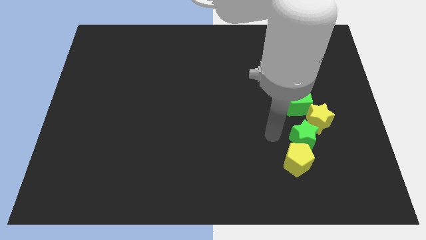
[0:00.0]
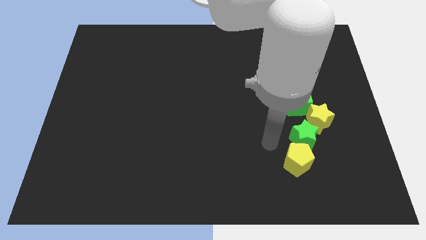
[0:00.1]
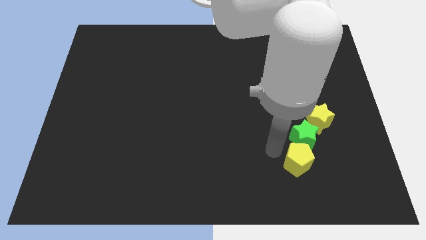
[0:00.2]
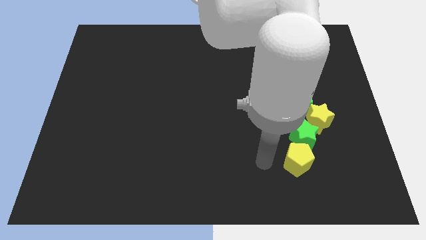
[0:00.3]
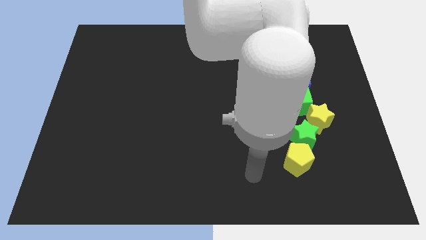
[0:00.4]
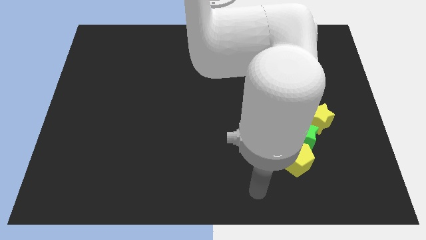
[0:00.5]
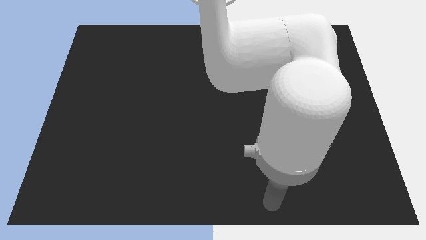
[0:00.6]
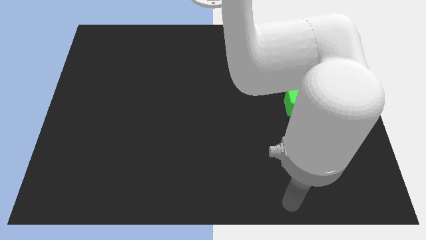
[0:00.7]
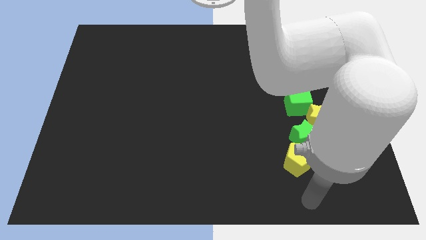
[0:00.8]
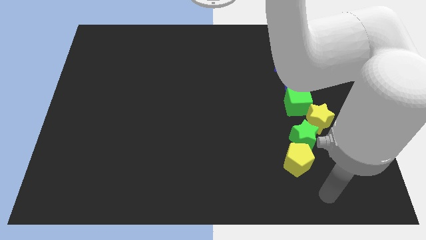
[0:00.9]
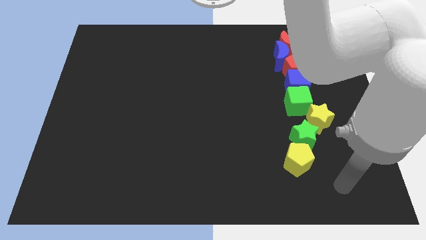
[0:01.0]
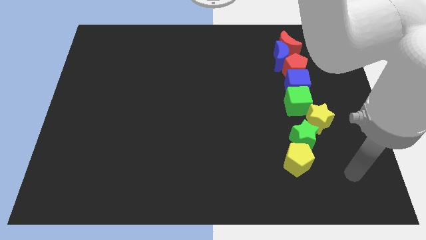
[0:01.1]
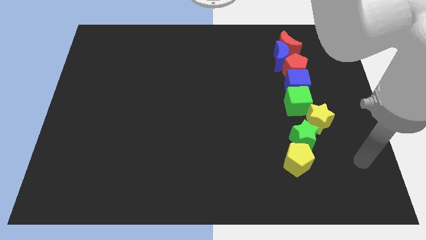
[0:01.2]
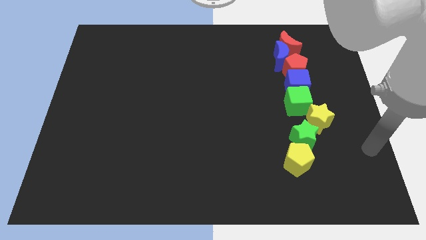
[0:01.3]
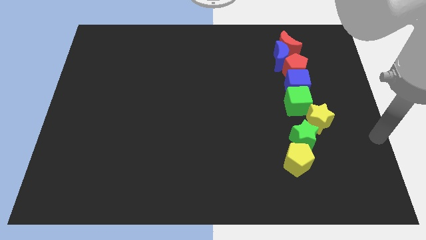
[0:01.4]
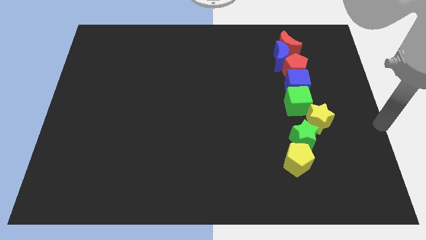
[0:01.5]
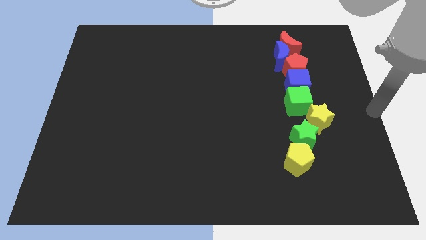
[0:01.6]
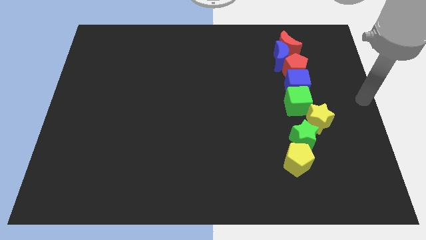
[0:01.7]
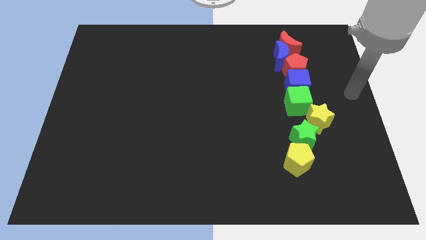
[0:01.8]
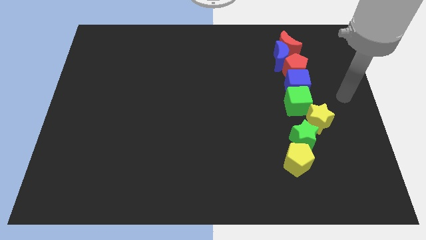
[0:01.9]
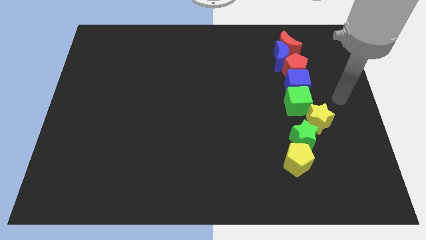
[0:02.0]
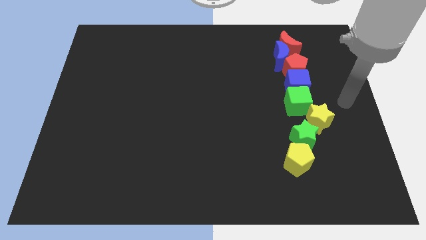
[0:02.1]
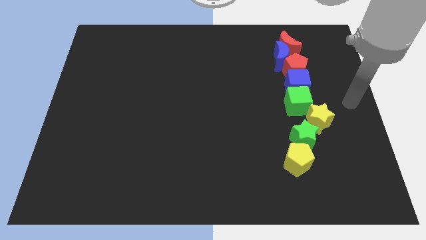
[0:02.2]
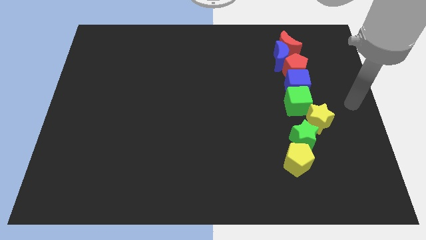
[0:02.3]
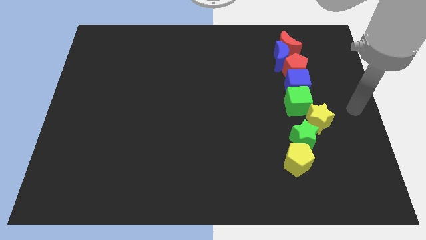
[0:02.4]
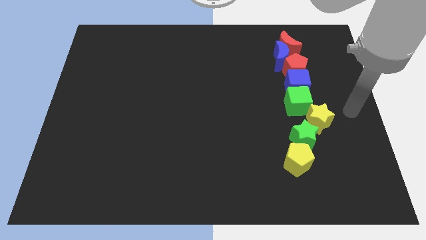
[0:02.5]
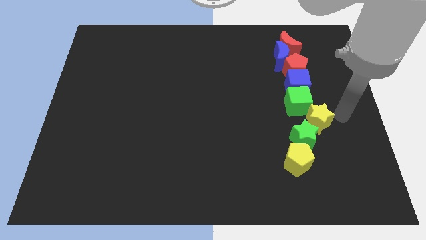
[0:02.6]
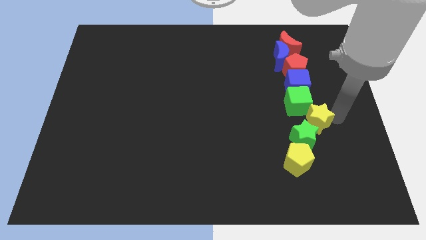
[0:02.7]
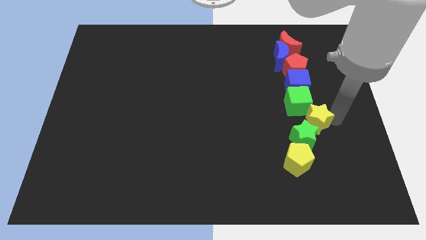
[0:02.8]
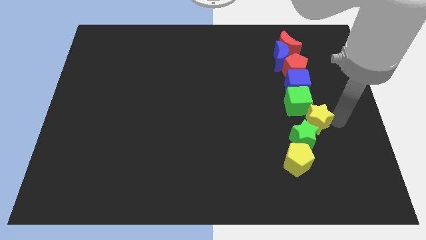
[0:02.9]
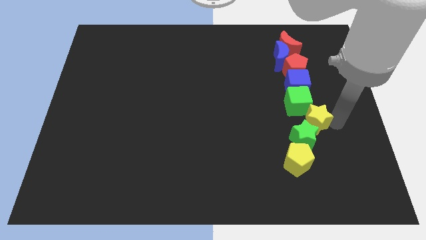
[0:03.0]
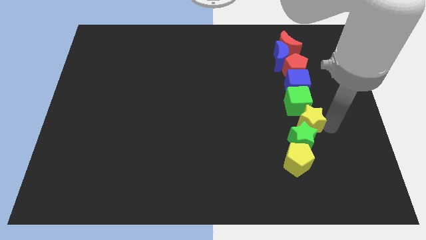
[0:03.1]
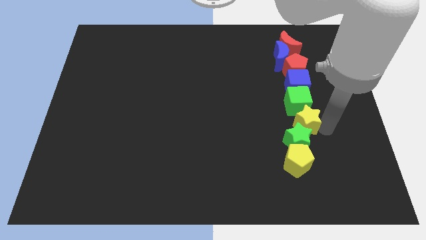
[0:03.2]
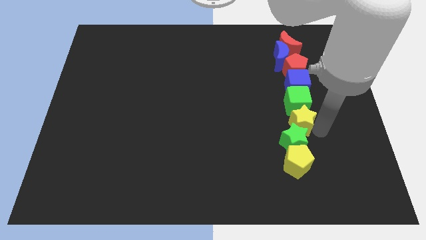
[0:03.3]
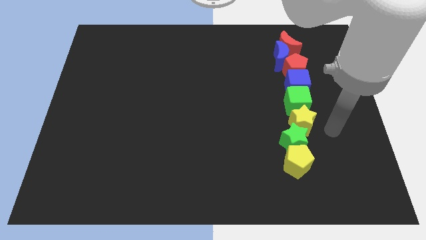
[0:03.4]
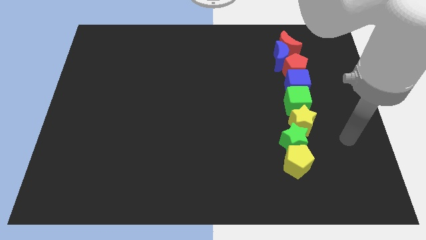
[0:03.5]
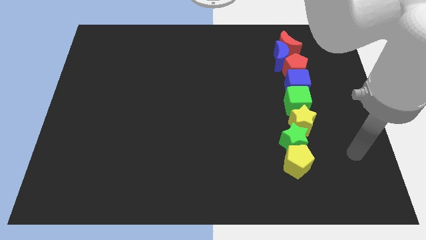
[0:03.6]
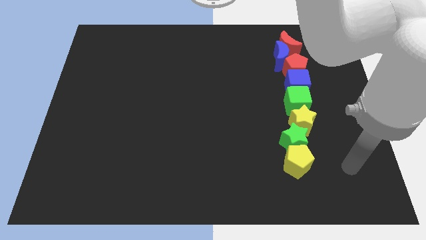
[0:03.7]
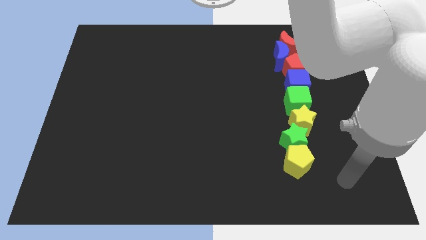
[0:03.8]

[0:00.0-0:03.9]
push the yellow star down to the green cube

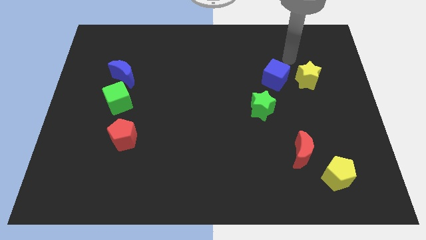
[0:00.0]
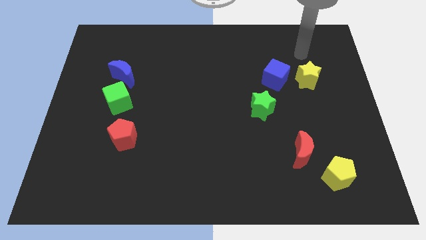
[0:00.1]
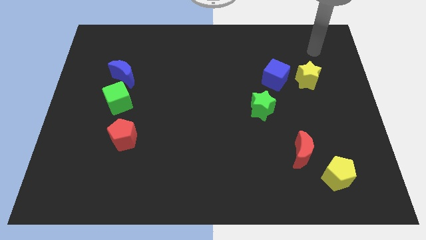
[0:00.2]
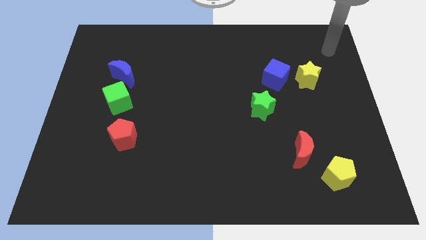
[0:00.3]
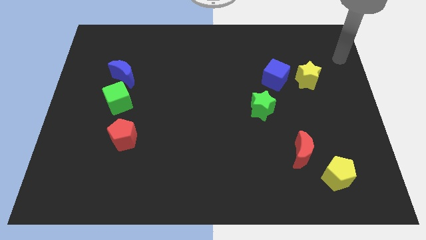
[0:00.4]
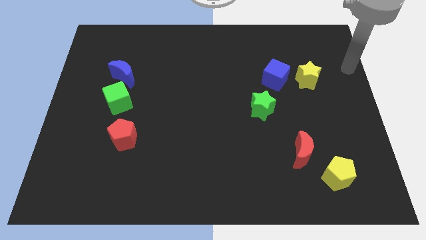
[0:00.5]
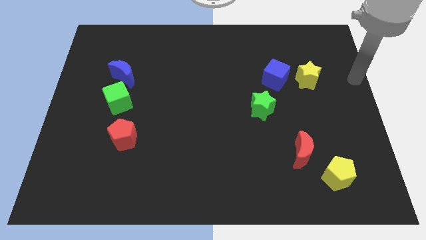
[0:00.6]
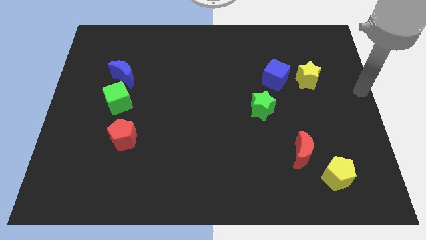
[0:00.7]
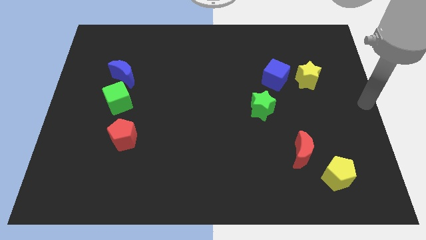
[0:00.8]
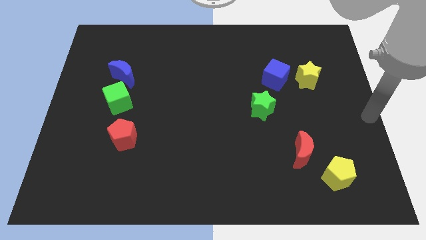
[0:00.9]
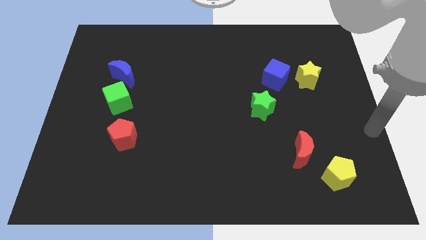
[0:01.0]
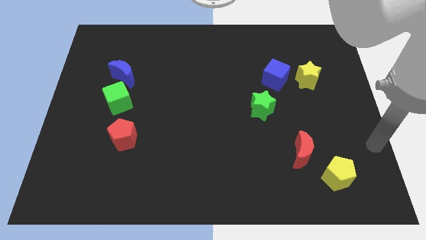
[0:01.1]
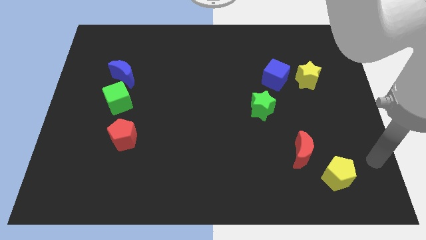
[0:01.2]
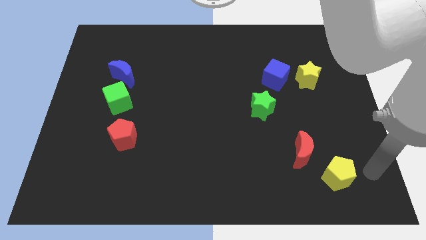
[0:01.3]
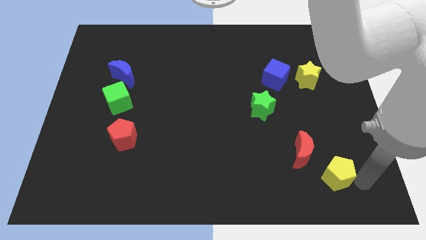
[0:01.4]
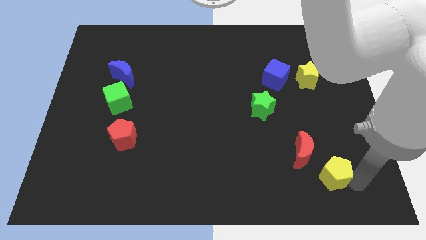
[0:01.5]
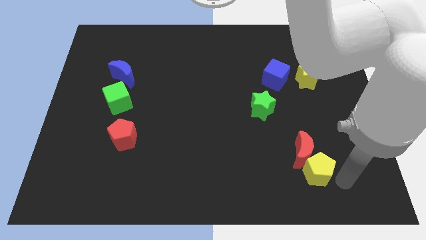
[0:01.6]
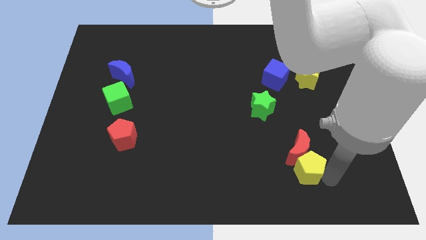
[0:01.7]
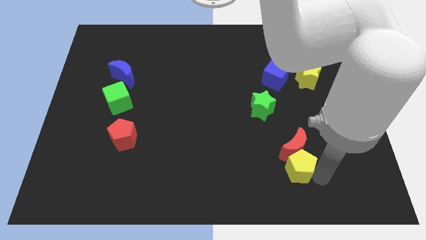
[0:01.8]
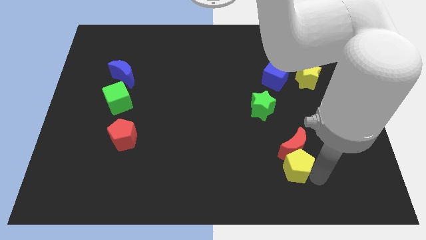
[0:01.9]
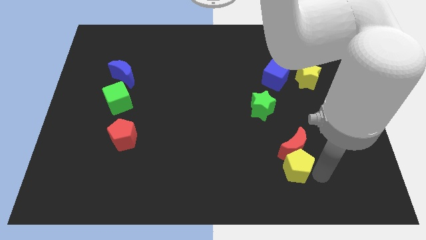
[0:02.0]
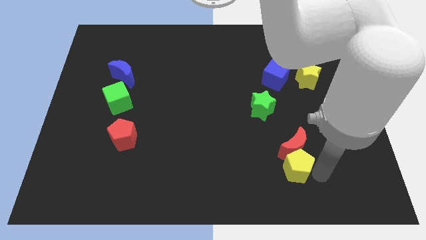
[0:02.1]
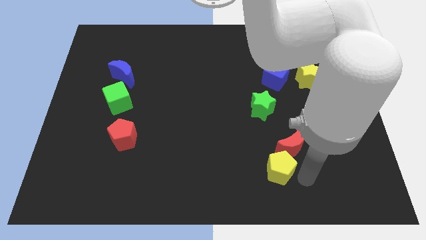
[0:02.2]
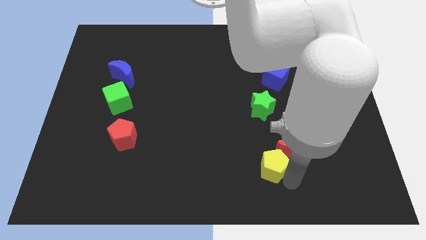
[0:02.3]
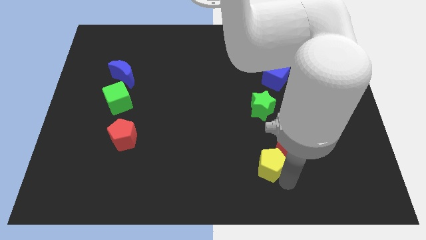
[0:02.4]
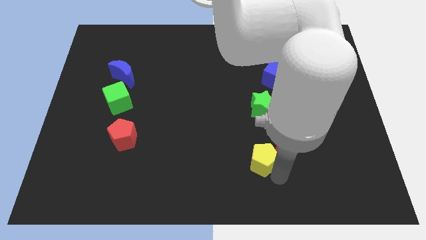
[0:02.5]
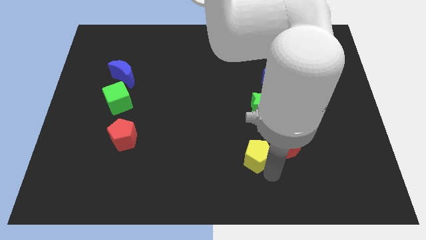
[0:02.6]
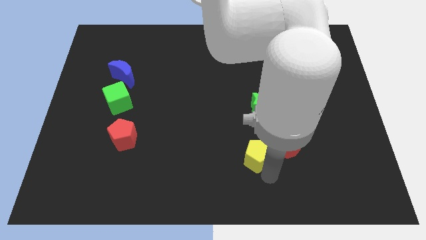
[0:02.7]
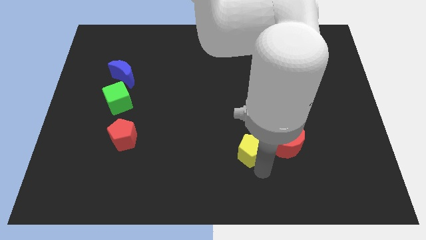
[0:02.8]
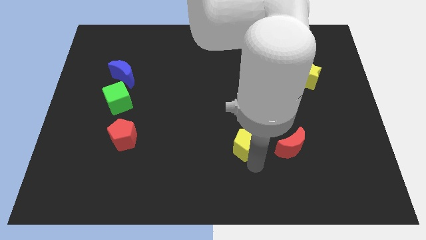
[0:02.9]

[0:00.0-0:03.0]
drag the yellow pentagon to the left of red crescent

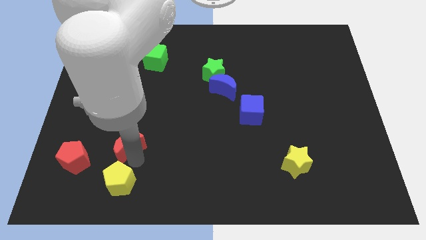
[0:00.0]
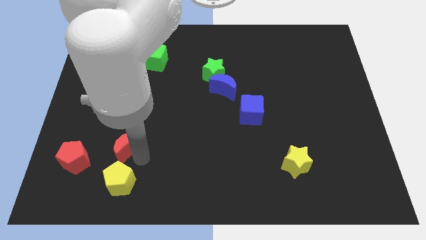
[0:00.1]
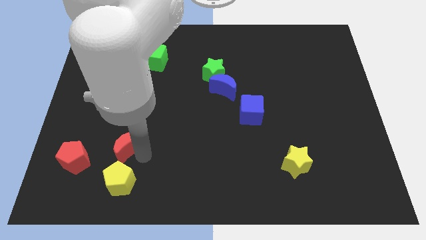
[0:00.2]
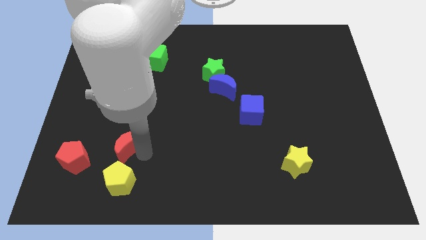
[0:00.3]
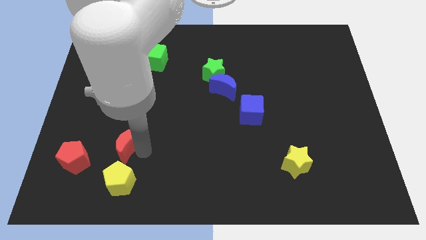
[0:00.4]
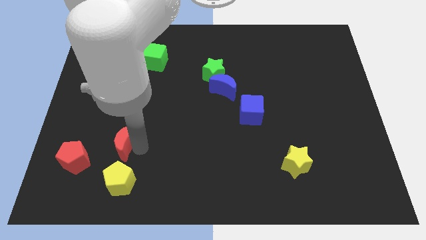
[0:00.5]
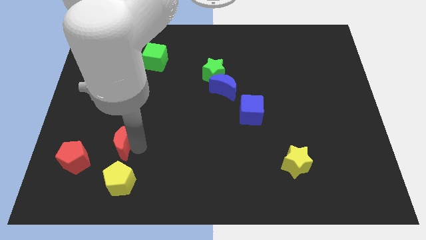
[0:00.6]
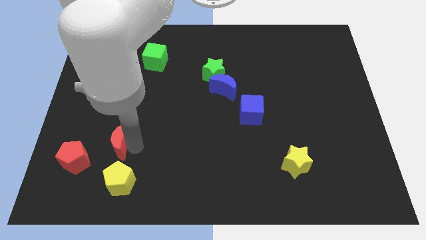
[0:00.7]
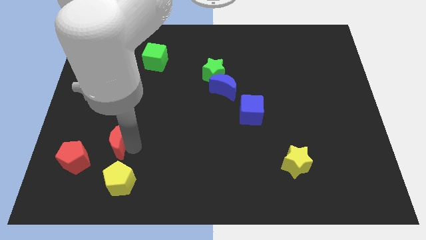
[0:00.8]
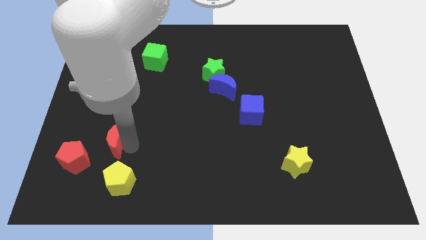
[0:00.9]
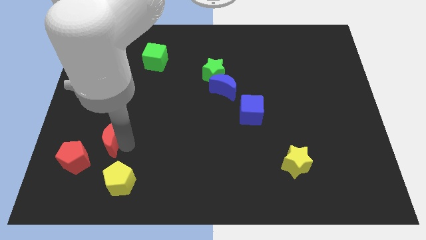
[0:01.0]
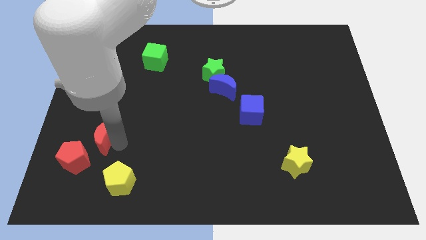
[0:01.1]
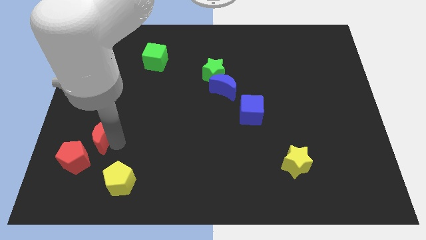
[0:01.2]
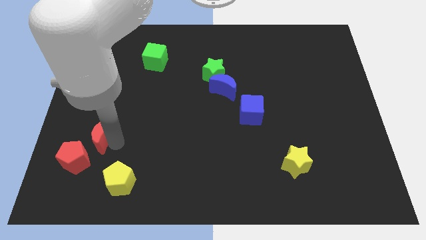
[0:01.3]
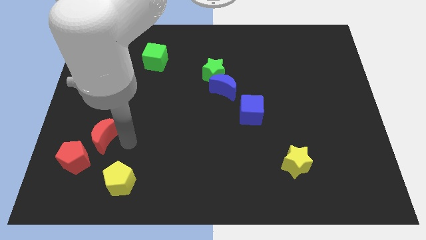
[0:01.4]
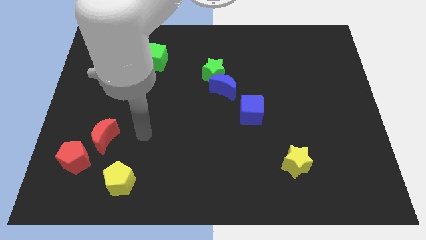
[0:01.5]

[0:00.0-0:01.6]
place the red crescent near the red pentagon

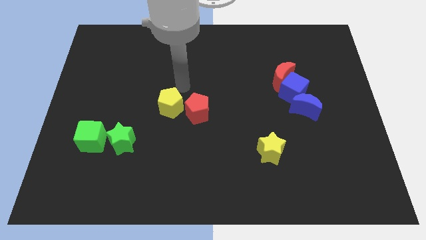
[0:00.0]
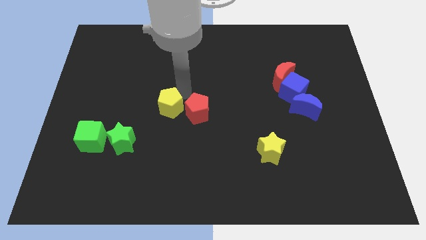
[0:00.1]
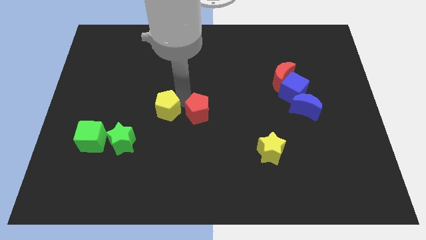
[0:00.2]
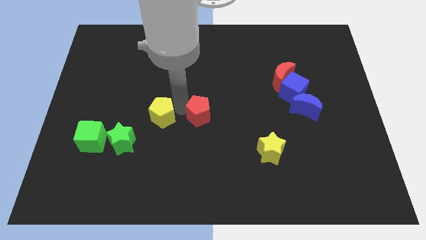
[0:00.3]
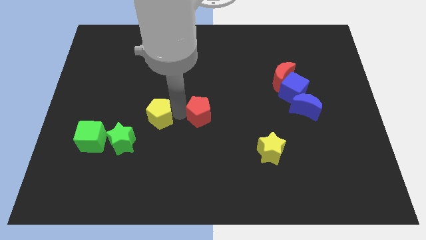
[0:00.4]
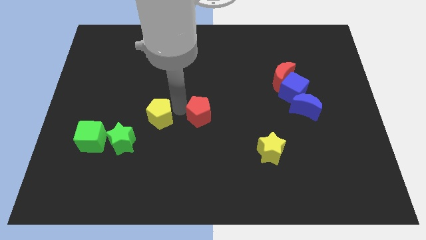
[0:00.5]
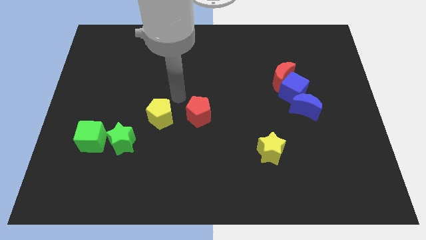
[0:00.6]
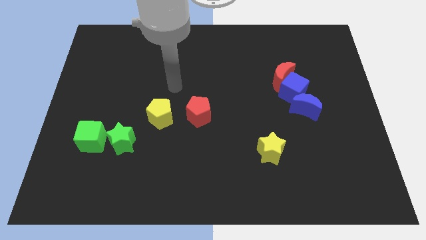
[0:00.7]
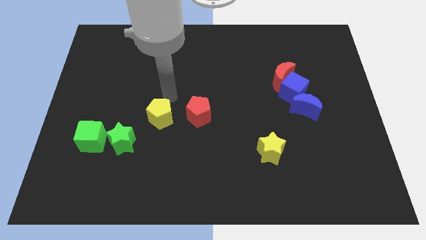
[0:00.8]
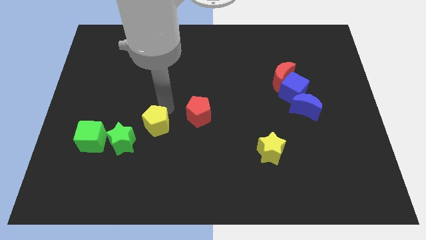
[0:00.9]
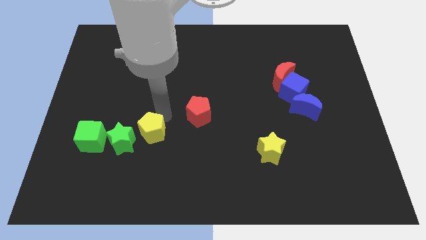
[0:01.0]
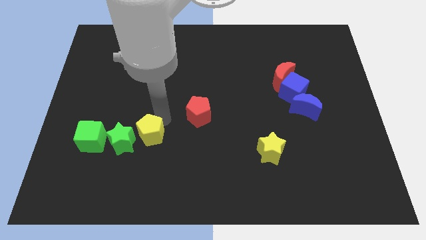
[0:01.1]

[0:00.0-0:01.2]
separate the pentagons
